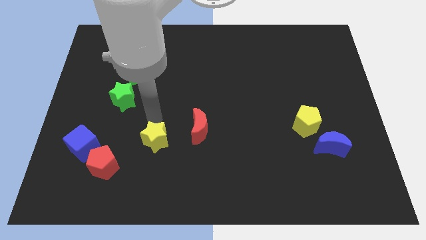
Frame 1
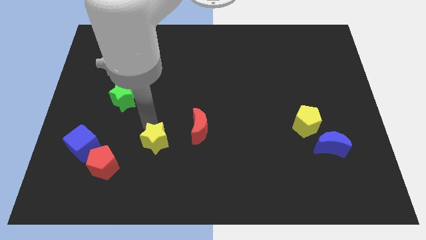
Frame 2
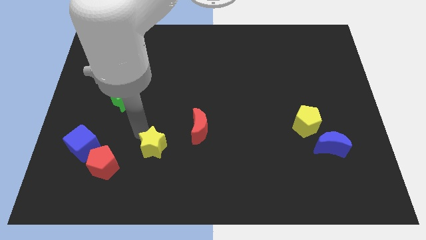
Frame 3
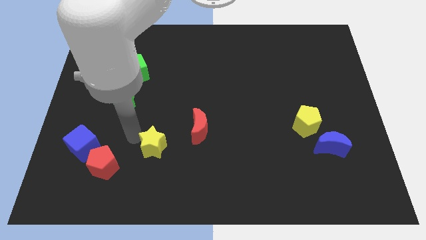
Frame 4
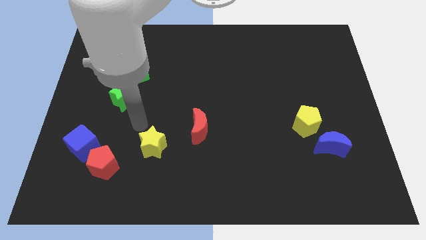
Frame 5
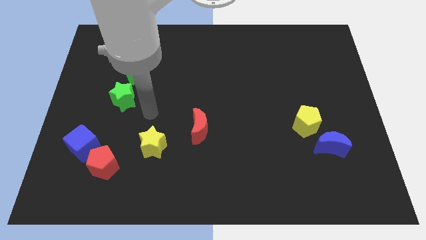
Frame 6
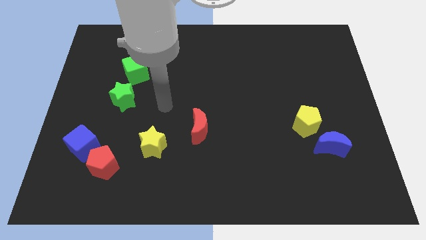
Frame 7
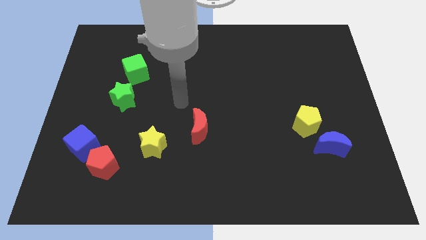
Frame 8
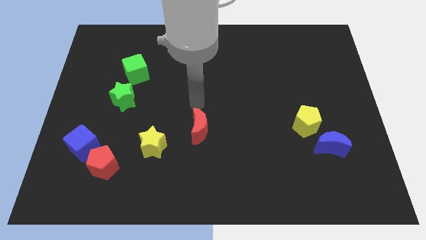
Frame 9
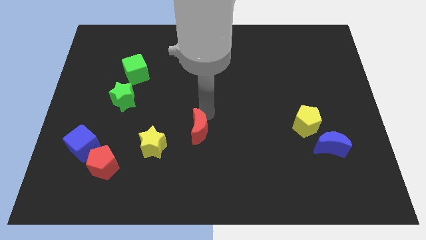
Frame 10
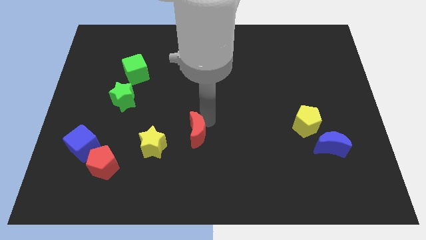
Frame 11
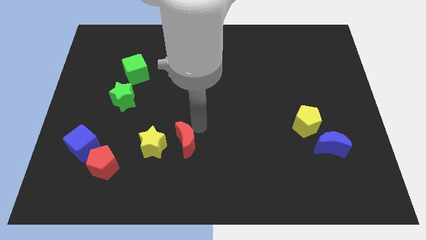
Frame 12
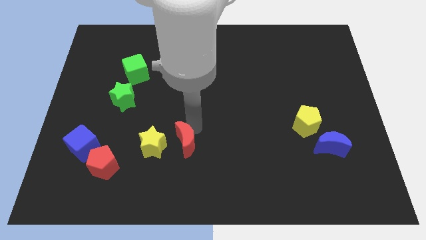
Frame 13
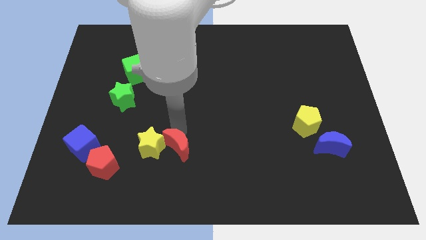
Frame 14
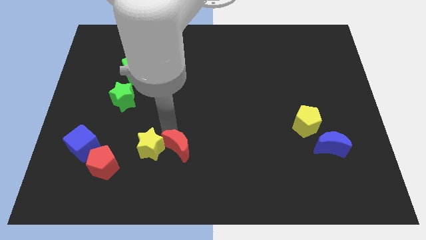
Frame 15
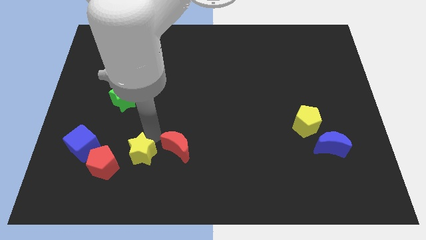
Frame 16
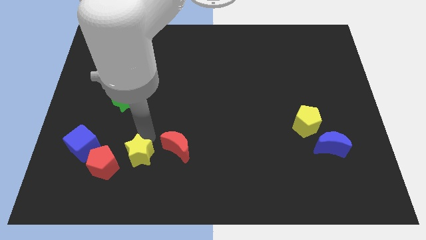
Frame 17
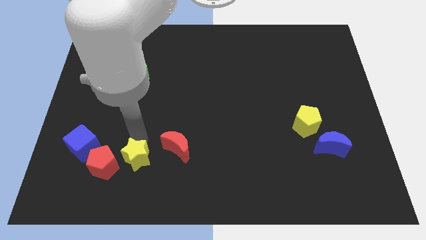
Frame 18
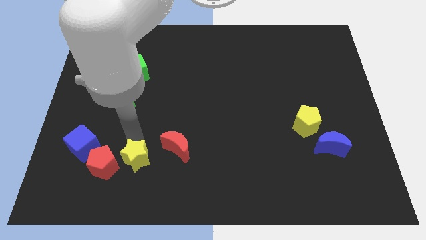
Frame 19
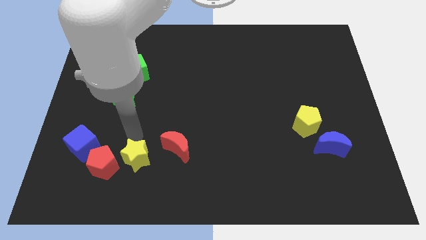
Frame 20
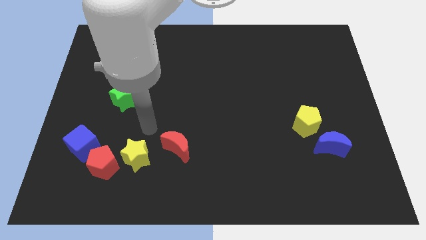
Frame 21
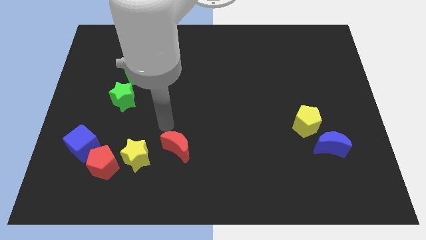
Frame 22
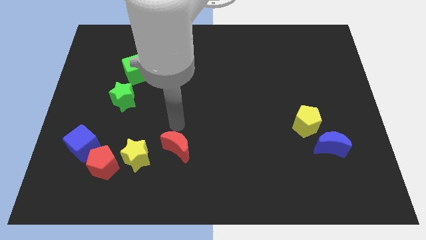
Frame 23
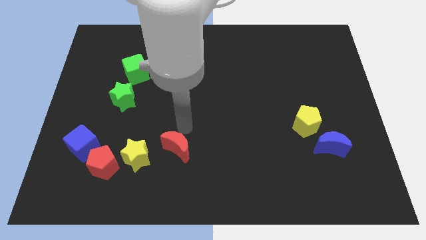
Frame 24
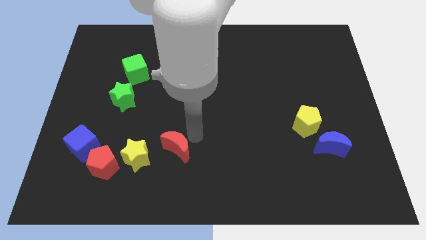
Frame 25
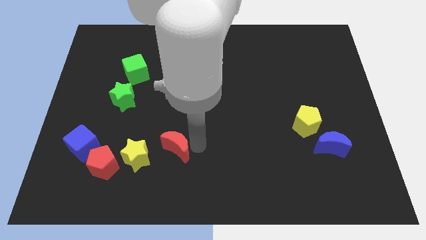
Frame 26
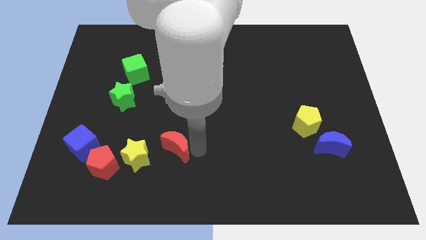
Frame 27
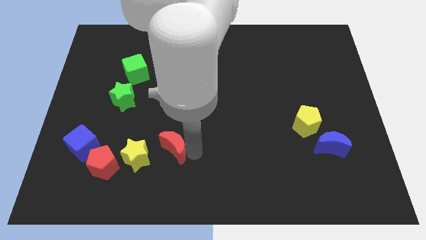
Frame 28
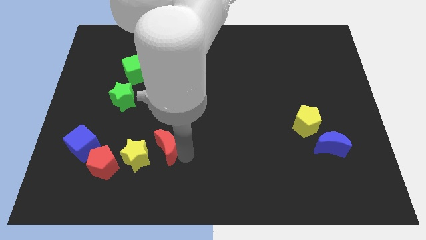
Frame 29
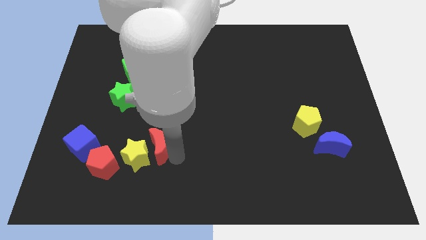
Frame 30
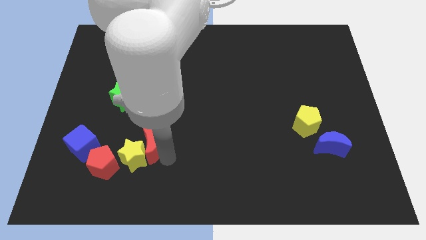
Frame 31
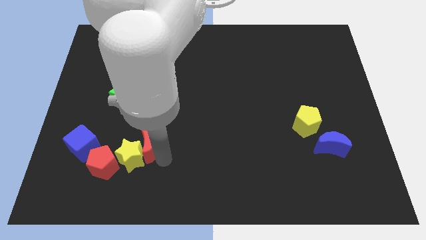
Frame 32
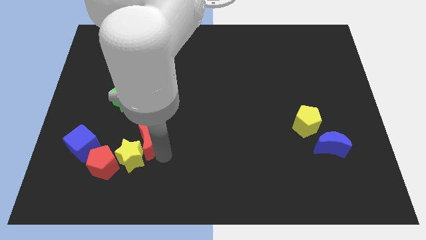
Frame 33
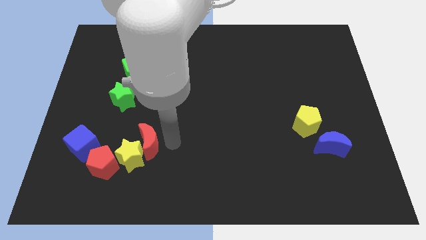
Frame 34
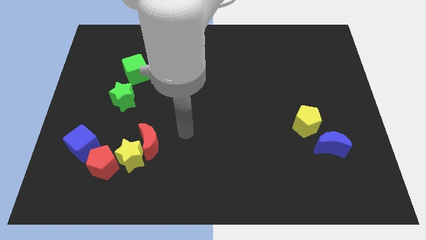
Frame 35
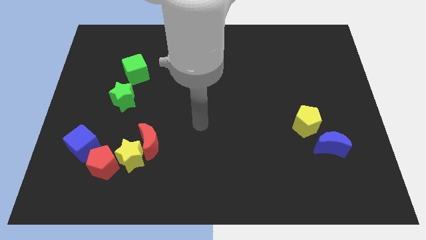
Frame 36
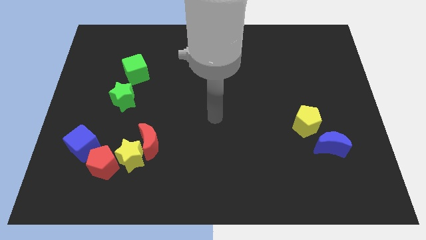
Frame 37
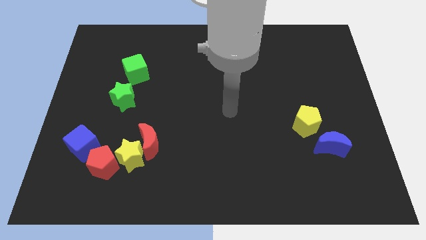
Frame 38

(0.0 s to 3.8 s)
push the yellow star and red crescent towards the red pentagon

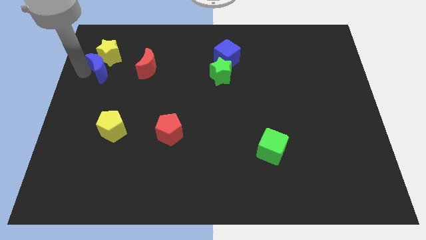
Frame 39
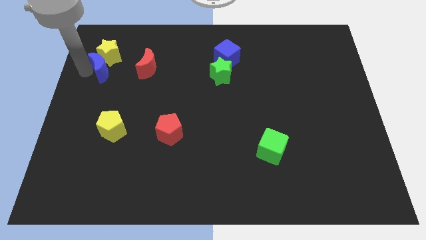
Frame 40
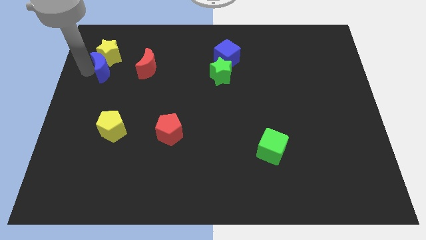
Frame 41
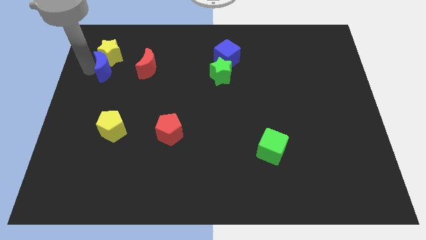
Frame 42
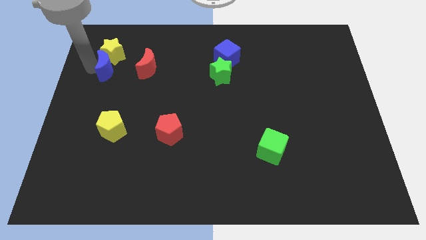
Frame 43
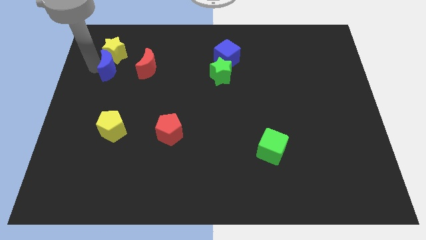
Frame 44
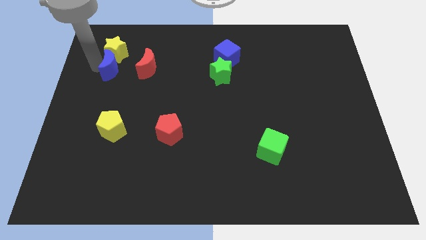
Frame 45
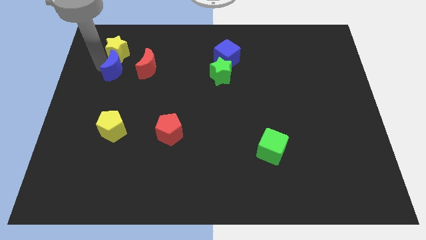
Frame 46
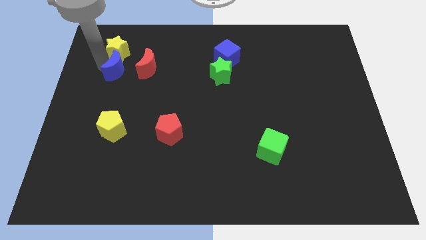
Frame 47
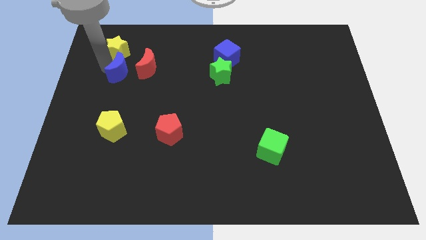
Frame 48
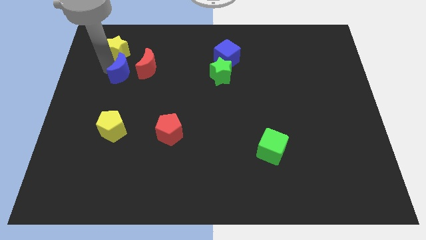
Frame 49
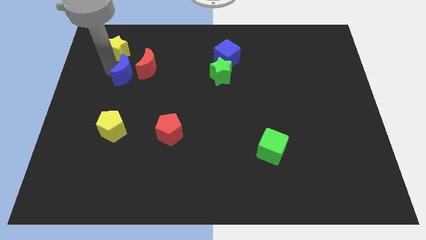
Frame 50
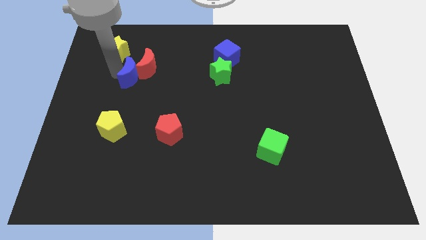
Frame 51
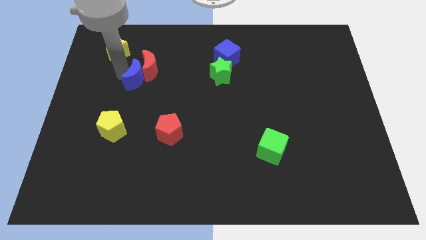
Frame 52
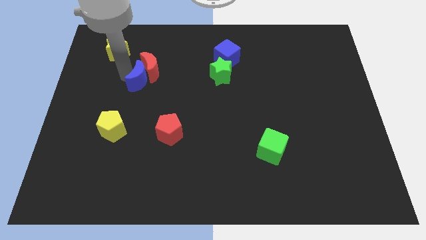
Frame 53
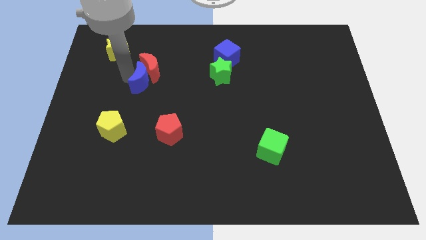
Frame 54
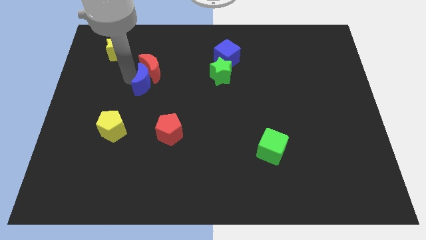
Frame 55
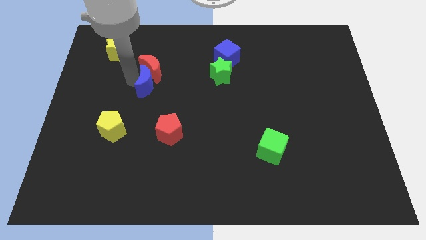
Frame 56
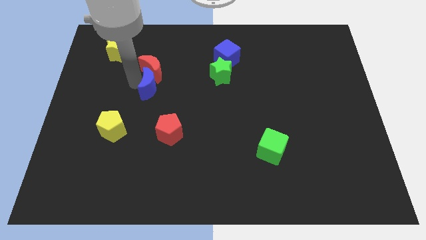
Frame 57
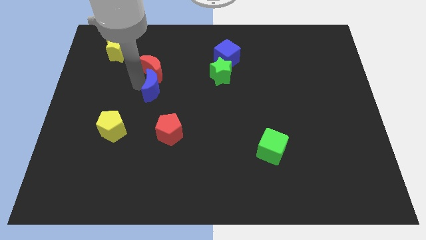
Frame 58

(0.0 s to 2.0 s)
put the blue moon into the red moon

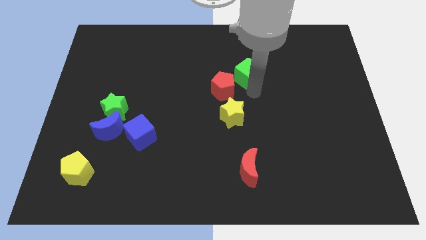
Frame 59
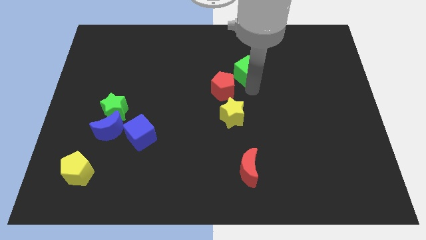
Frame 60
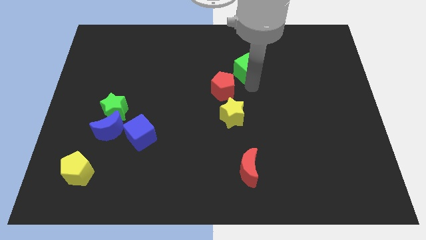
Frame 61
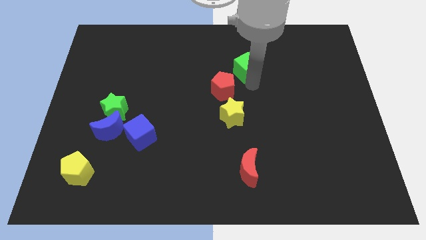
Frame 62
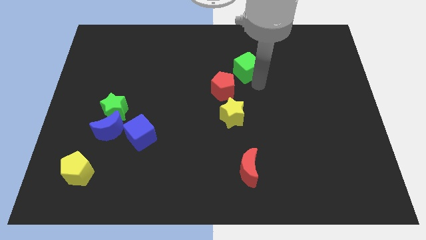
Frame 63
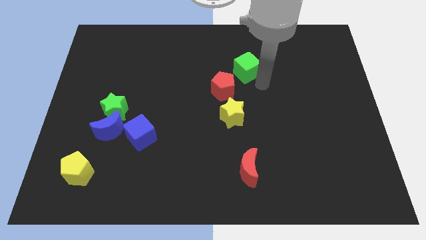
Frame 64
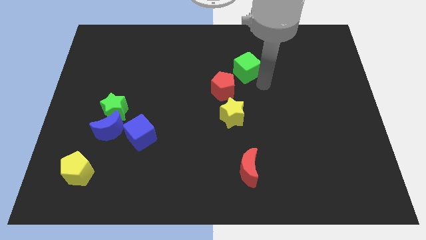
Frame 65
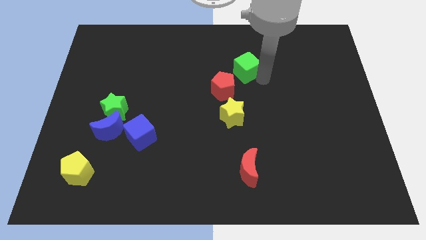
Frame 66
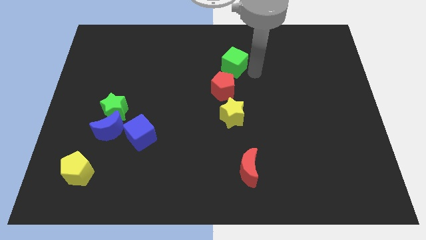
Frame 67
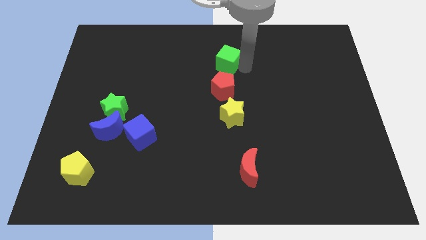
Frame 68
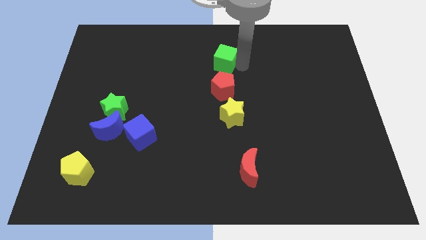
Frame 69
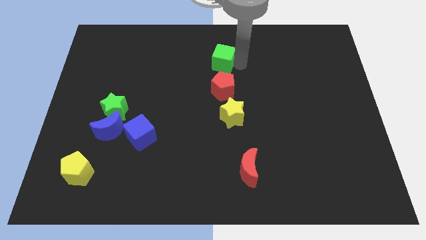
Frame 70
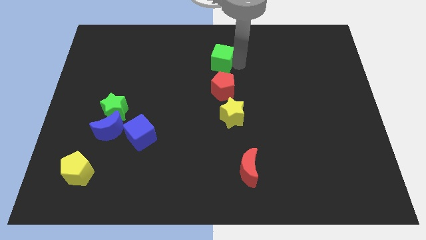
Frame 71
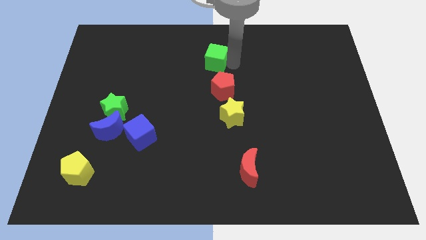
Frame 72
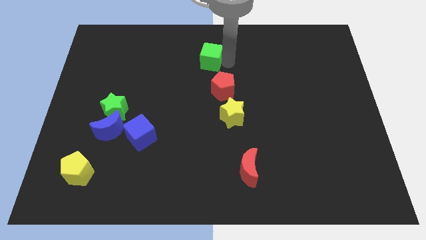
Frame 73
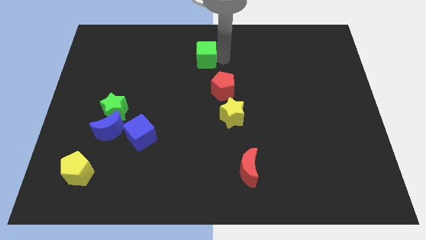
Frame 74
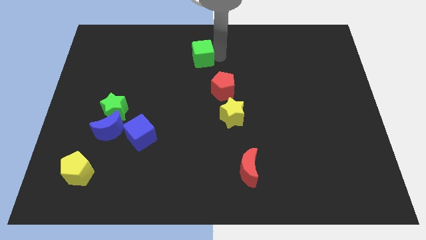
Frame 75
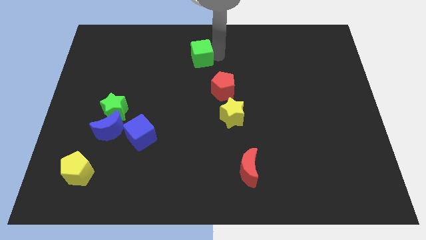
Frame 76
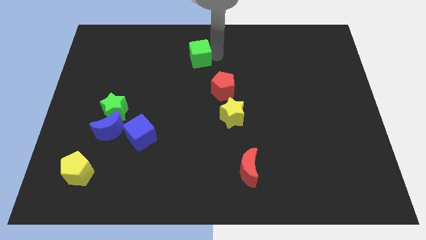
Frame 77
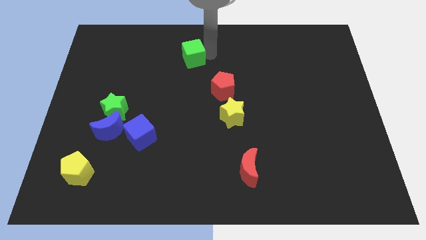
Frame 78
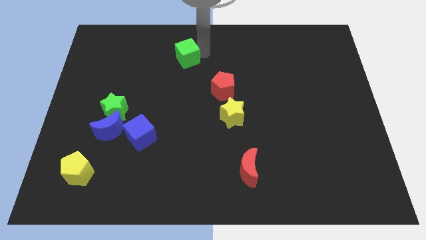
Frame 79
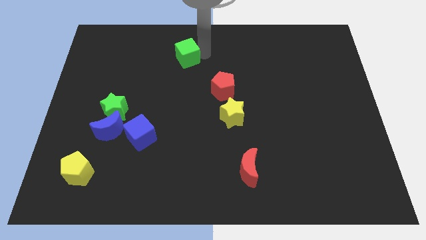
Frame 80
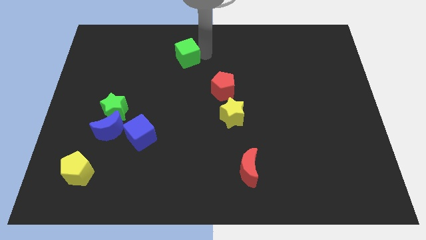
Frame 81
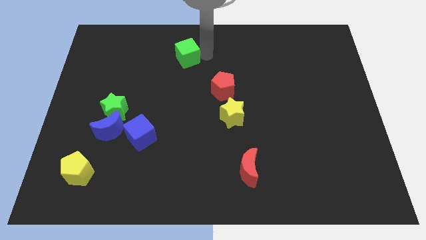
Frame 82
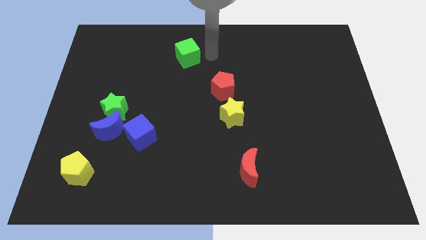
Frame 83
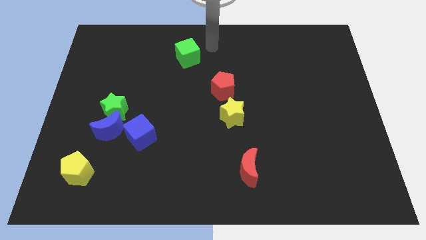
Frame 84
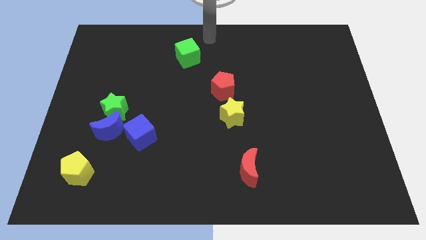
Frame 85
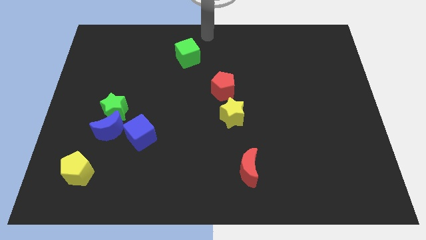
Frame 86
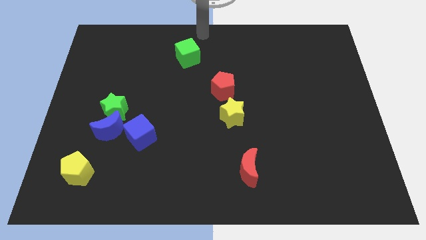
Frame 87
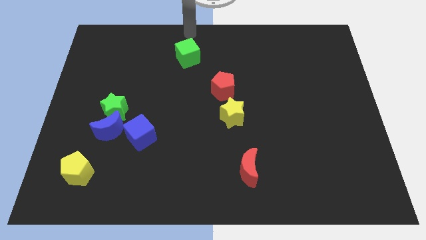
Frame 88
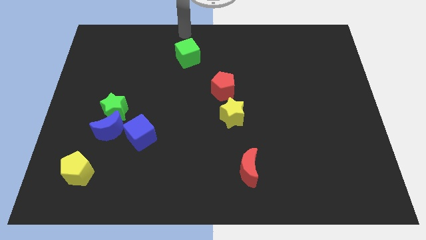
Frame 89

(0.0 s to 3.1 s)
push green cube slightly towards left
